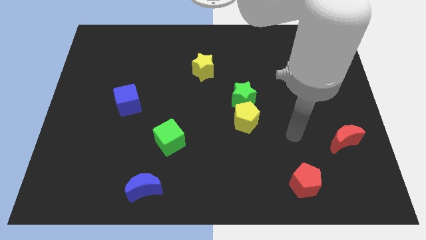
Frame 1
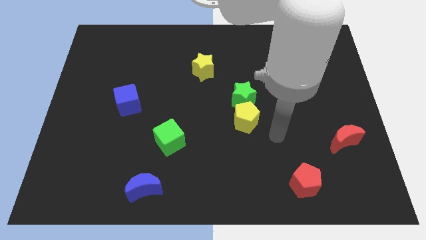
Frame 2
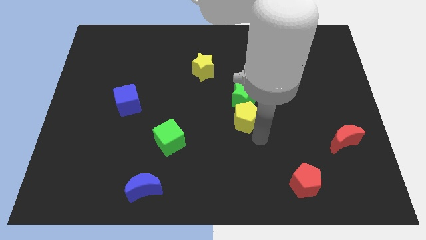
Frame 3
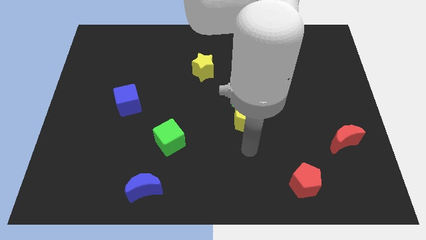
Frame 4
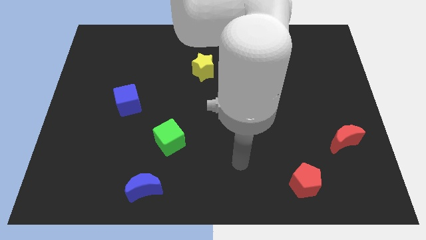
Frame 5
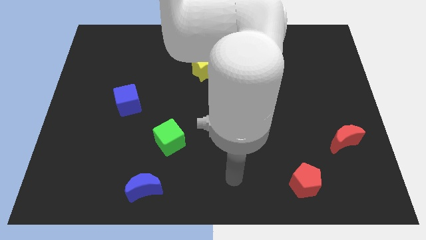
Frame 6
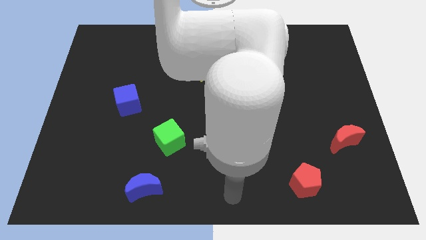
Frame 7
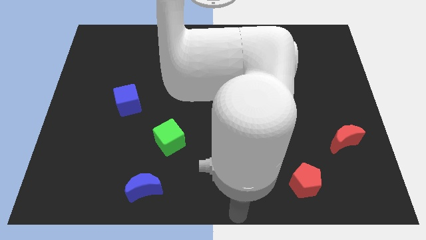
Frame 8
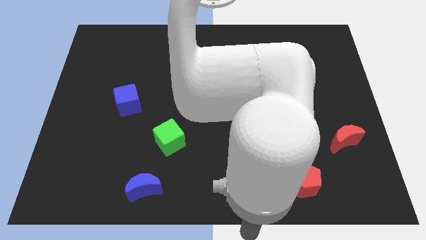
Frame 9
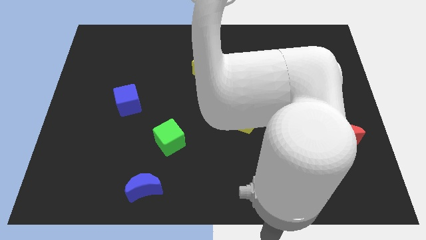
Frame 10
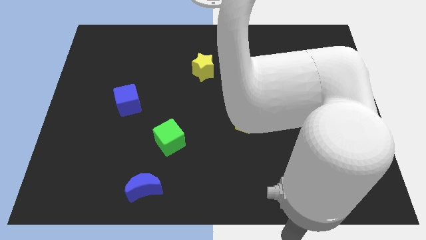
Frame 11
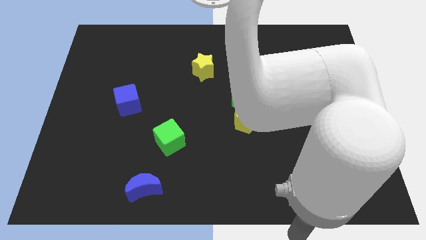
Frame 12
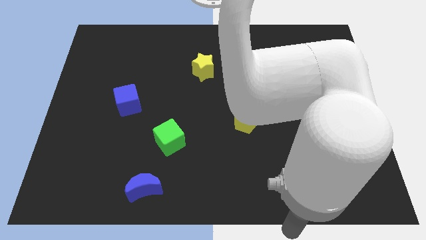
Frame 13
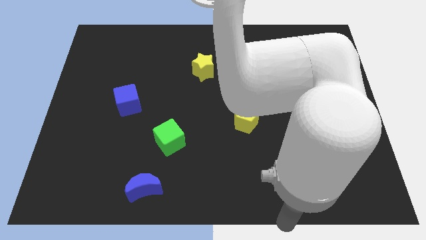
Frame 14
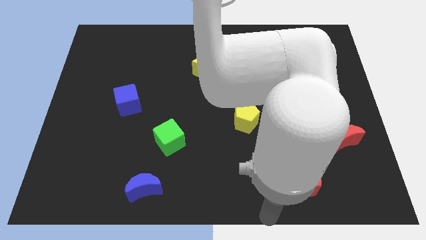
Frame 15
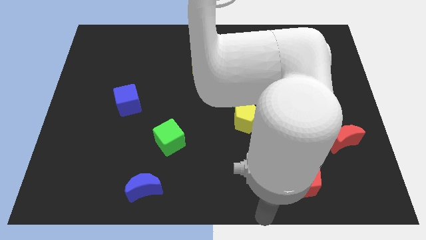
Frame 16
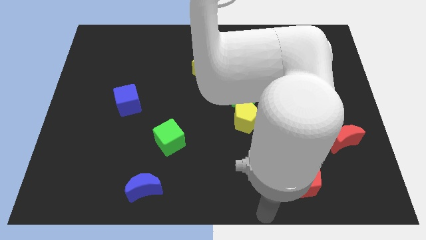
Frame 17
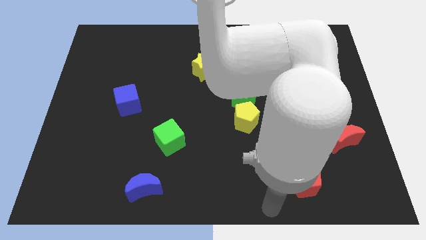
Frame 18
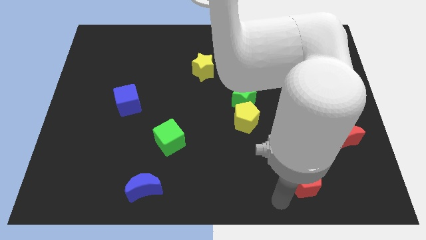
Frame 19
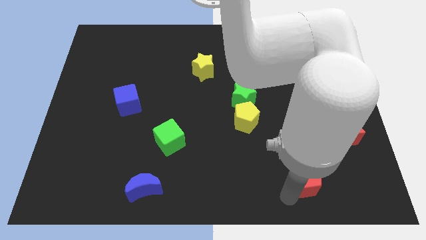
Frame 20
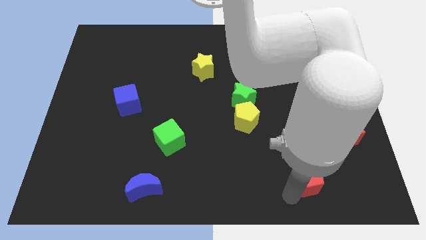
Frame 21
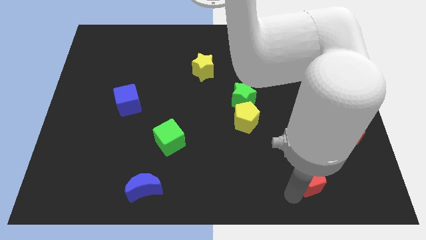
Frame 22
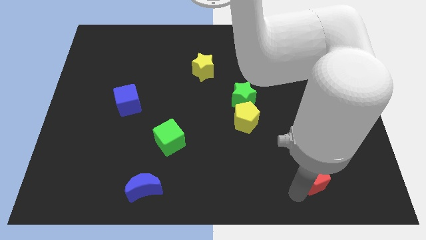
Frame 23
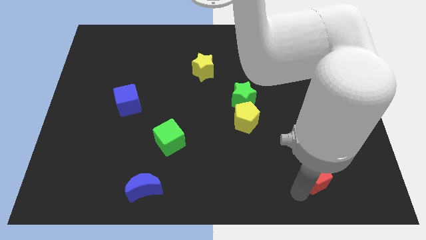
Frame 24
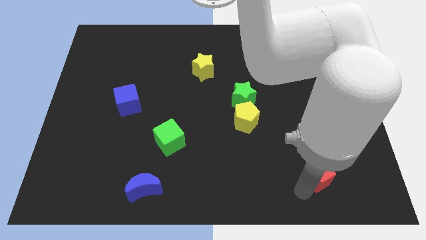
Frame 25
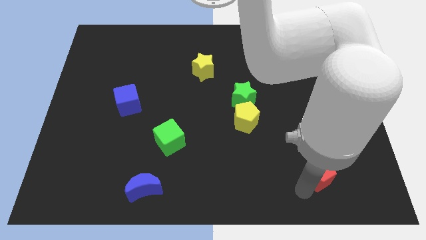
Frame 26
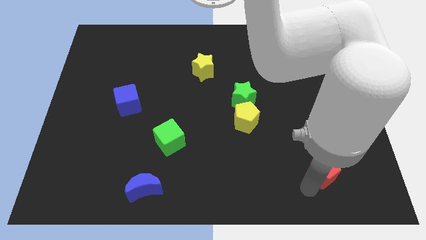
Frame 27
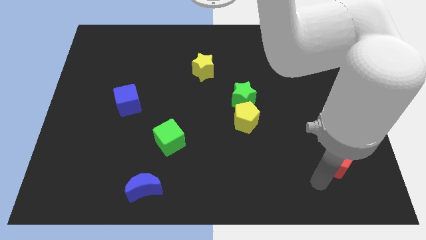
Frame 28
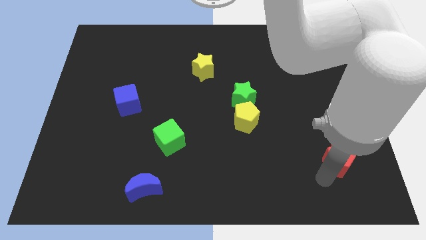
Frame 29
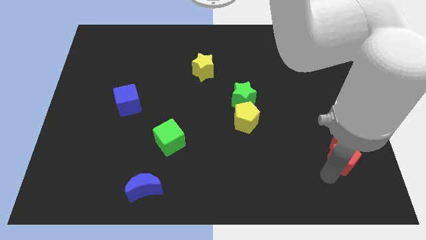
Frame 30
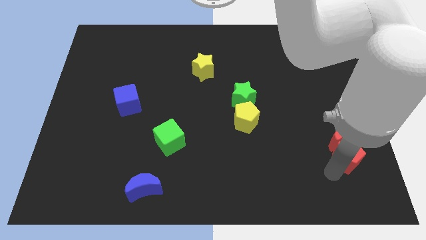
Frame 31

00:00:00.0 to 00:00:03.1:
move the red pentagon to the bottom of the red crescent

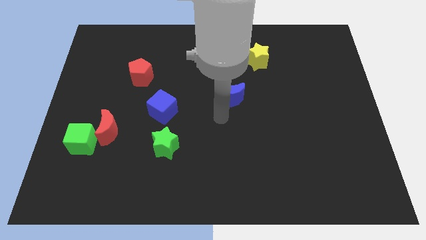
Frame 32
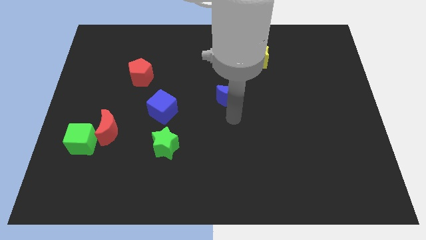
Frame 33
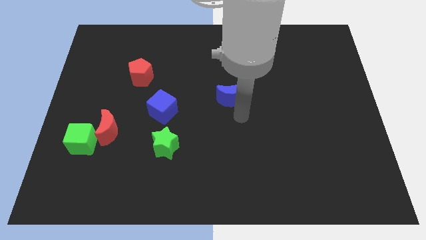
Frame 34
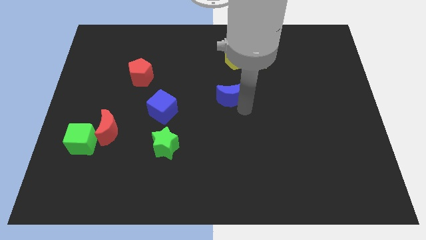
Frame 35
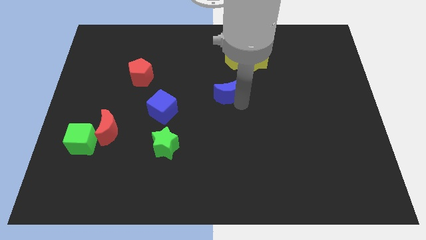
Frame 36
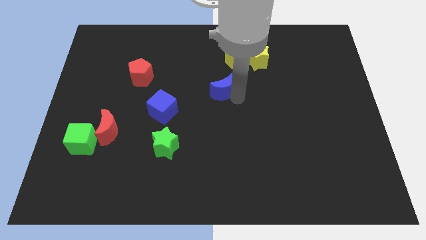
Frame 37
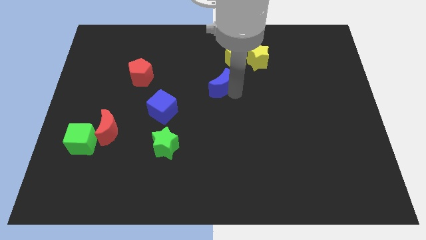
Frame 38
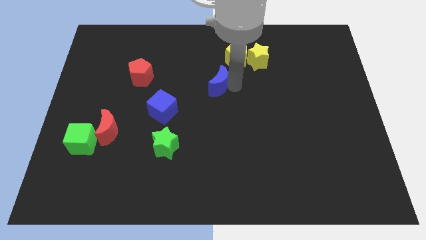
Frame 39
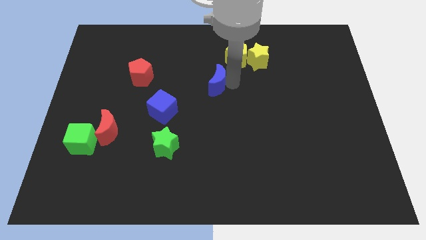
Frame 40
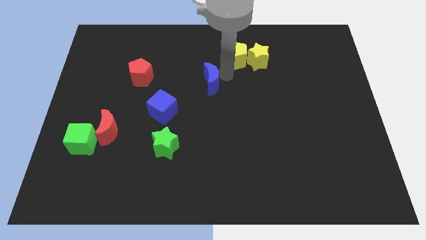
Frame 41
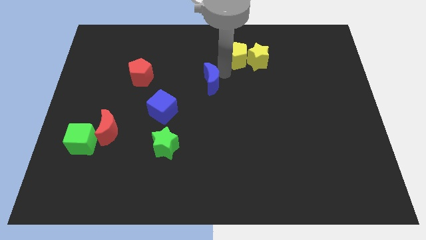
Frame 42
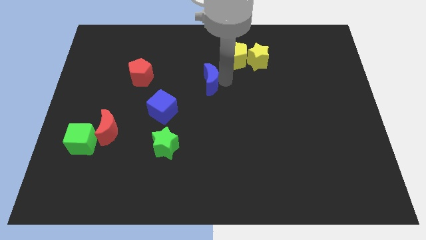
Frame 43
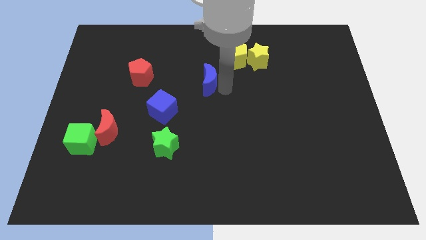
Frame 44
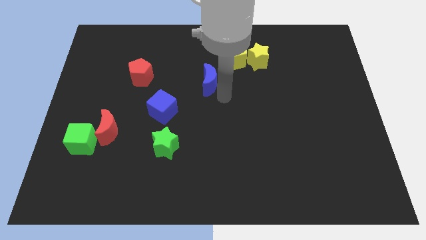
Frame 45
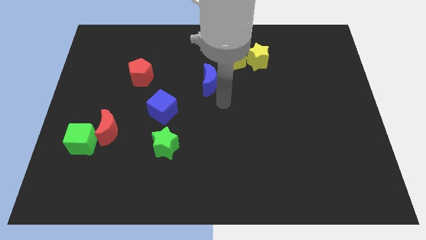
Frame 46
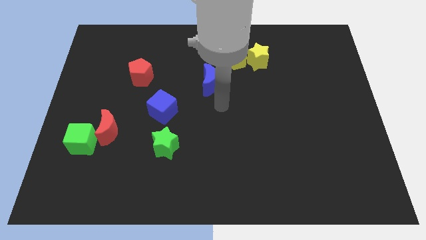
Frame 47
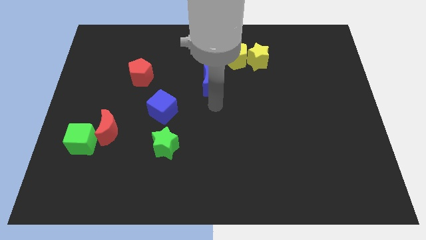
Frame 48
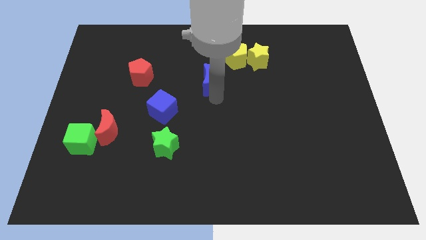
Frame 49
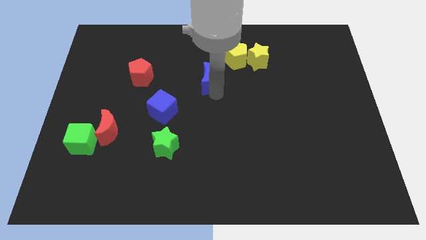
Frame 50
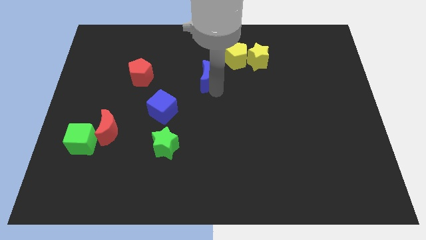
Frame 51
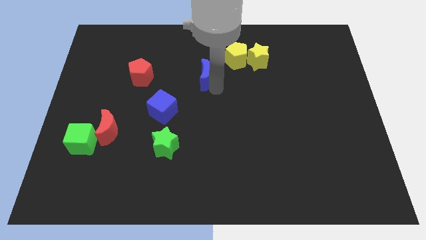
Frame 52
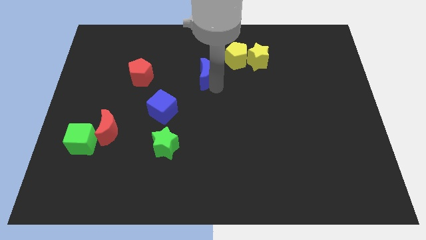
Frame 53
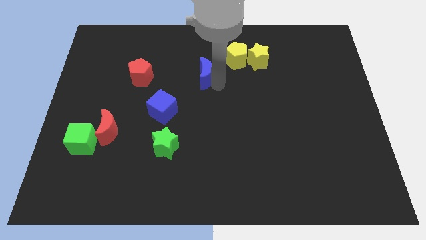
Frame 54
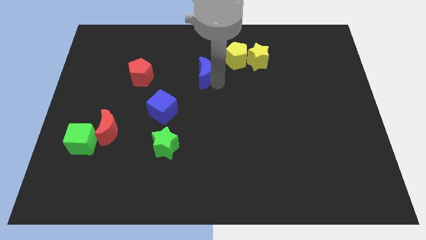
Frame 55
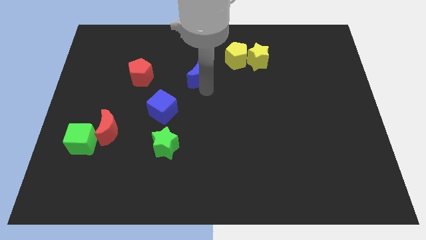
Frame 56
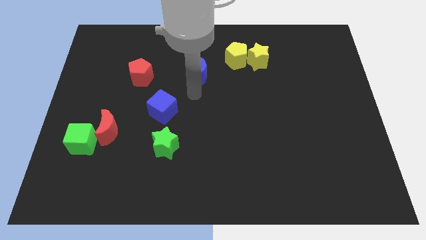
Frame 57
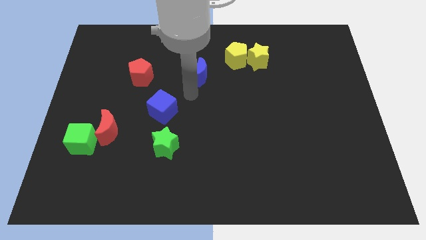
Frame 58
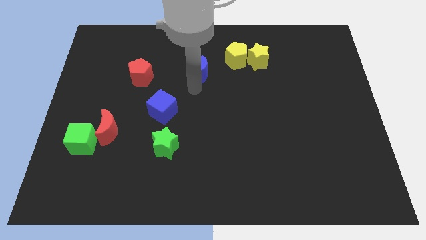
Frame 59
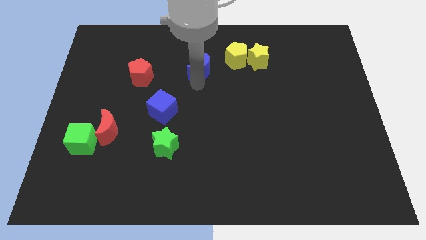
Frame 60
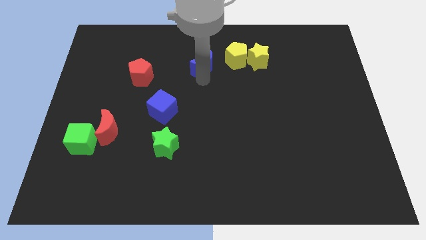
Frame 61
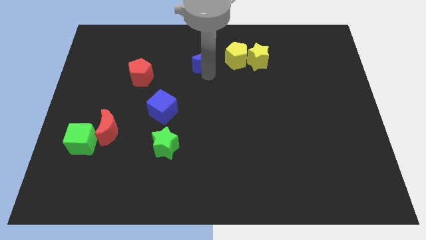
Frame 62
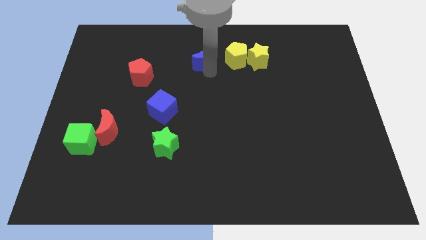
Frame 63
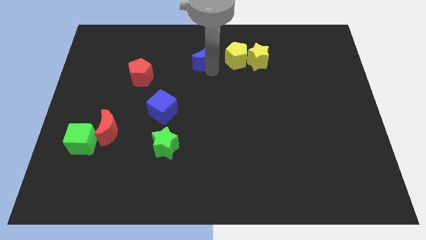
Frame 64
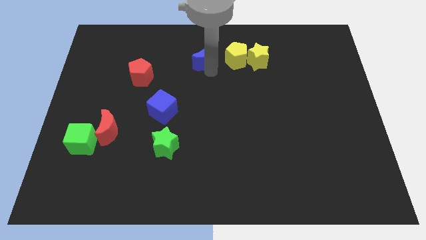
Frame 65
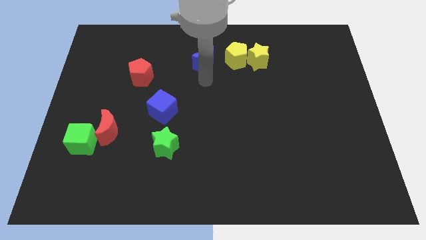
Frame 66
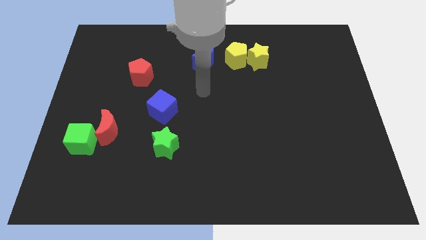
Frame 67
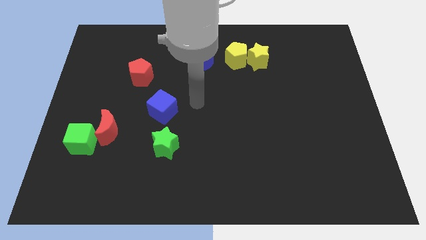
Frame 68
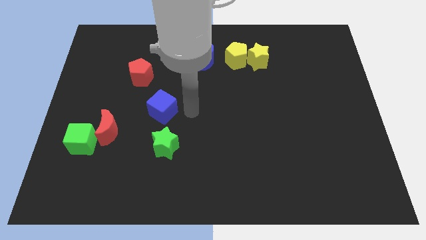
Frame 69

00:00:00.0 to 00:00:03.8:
place the blue moon left to the yellow pentagon

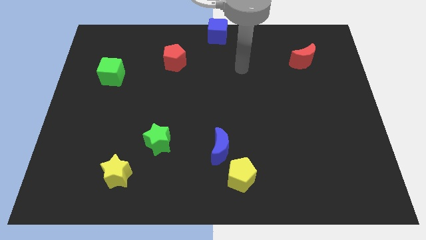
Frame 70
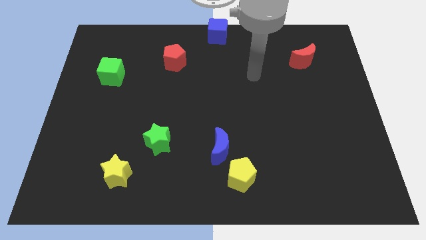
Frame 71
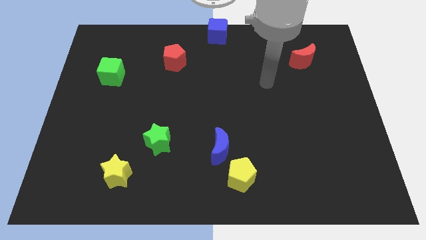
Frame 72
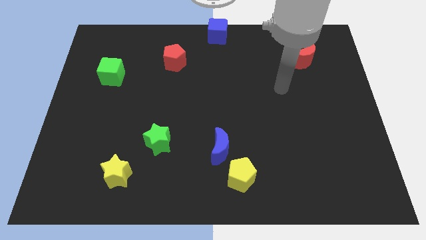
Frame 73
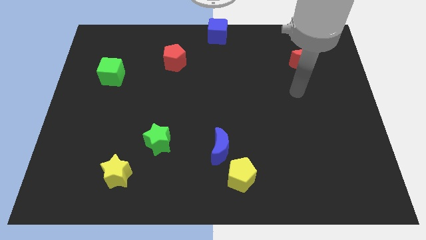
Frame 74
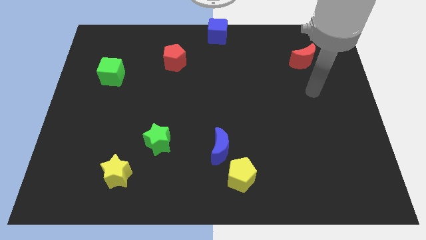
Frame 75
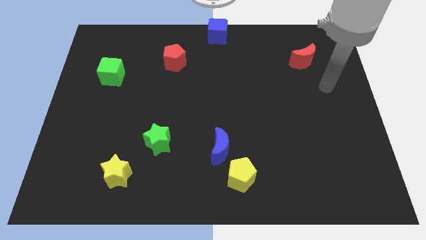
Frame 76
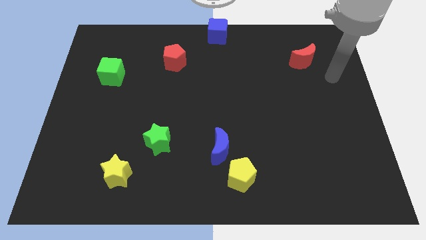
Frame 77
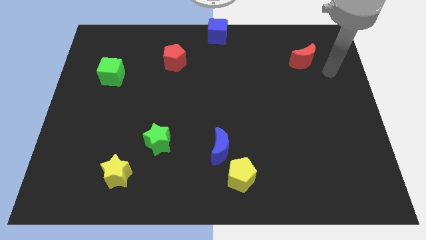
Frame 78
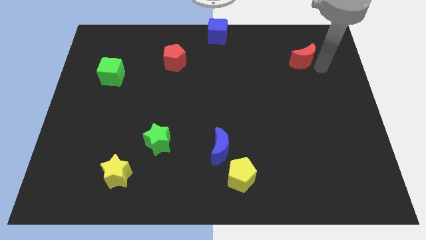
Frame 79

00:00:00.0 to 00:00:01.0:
point the arm to the right of the red moon

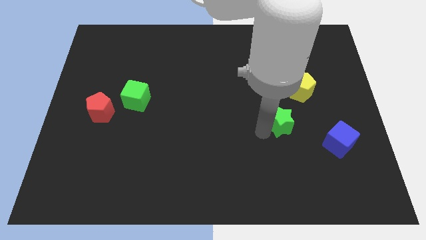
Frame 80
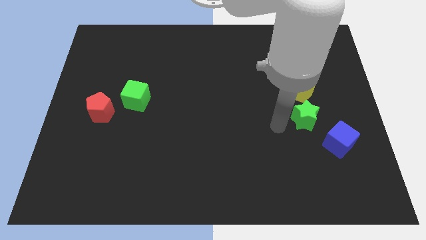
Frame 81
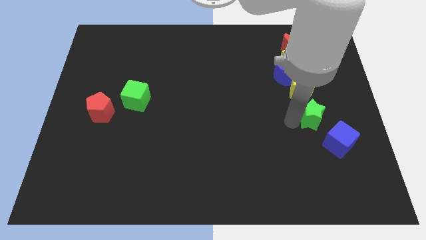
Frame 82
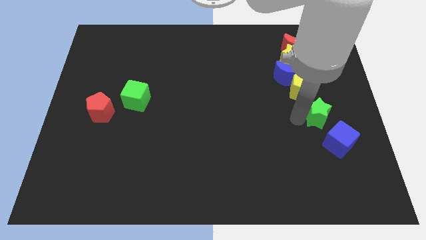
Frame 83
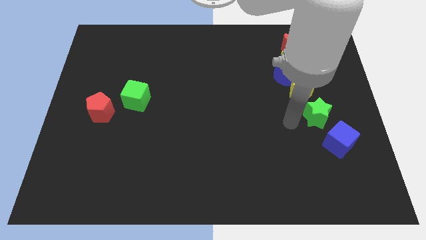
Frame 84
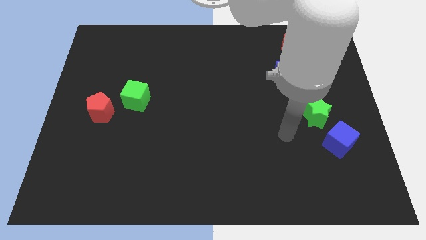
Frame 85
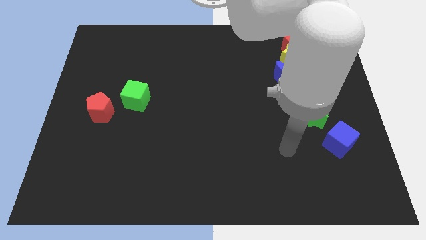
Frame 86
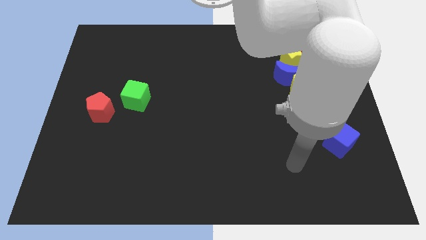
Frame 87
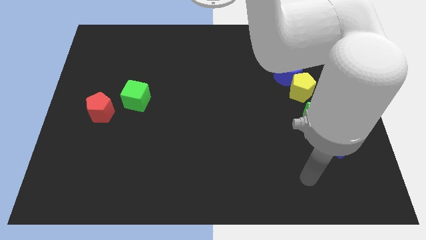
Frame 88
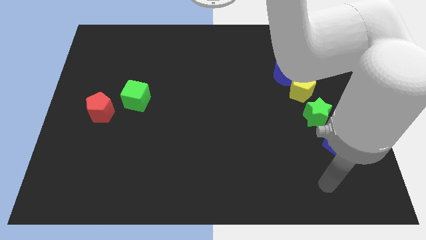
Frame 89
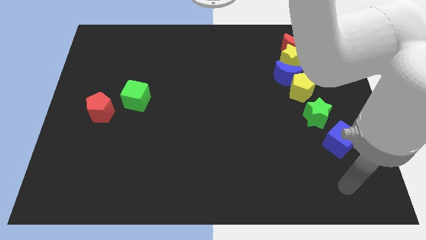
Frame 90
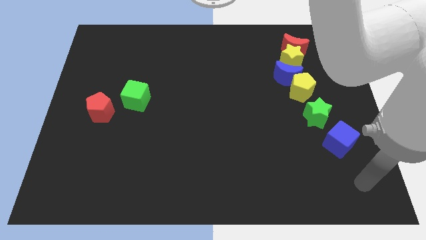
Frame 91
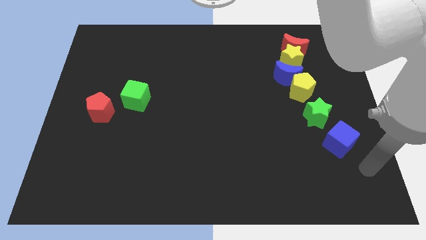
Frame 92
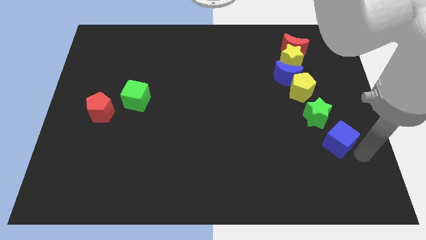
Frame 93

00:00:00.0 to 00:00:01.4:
push the green star to the right side
